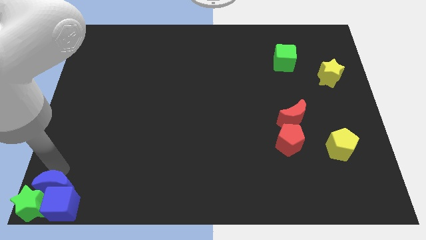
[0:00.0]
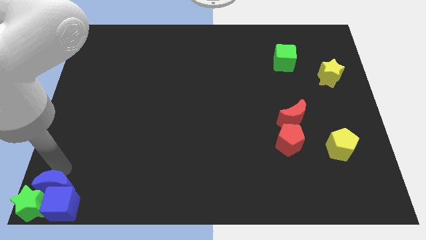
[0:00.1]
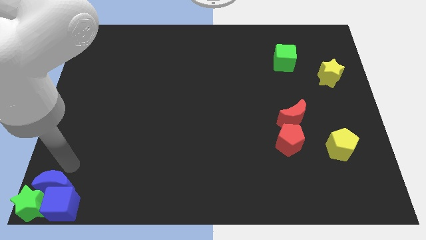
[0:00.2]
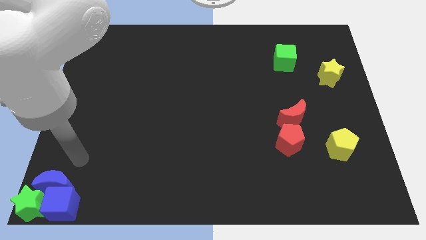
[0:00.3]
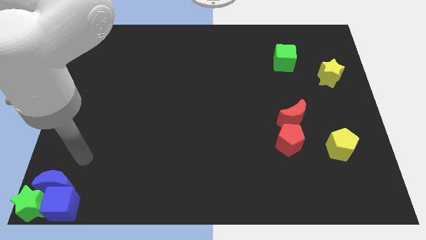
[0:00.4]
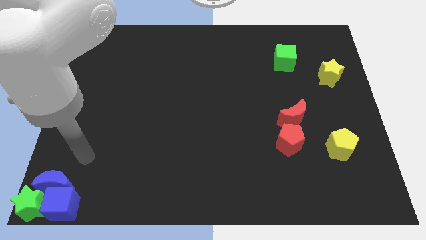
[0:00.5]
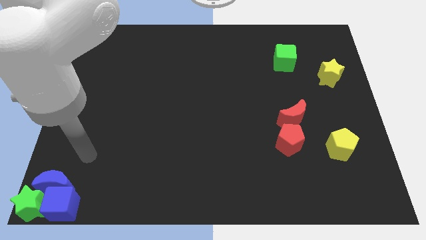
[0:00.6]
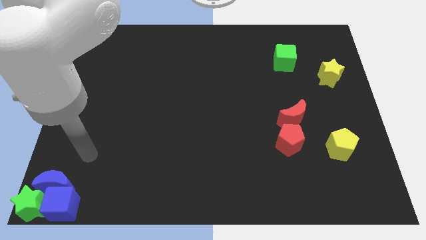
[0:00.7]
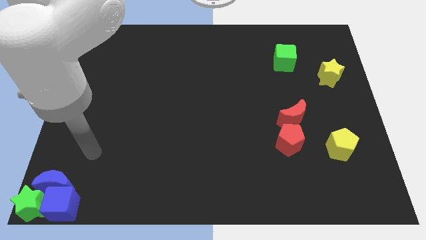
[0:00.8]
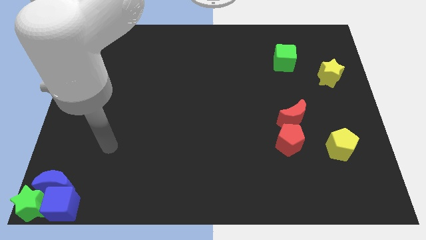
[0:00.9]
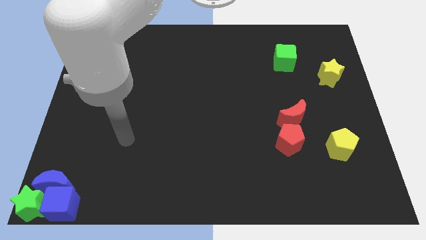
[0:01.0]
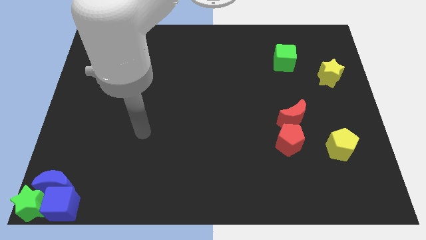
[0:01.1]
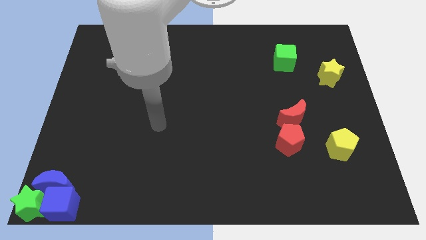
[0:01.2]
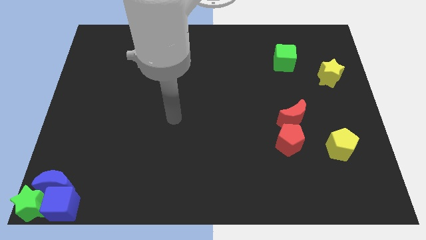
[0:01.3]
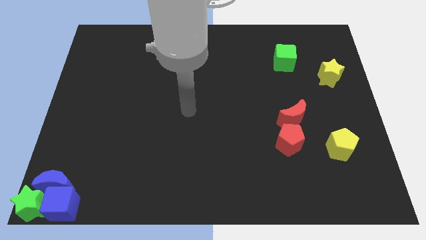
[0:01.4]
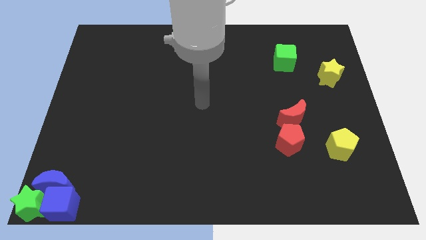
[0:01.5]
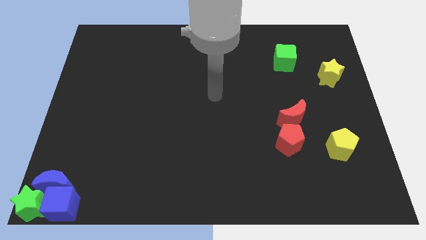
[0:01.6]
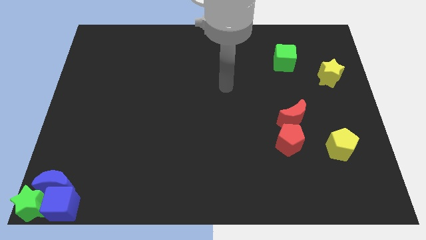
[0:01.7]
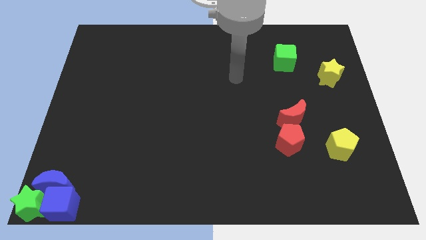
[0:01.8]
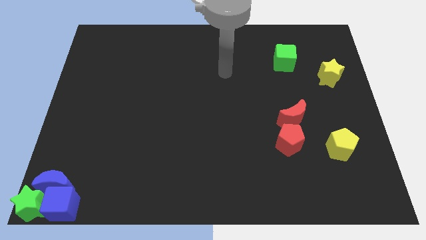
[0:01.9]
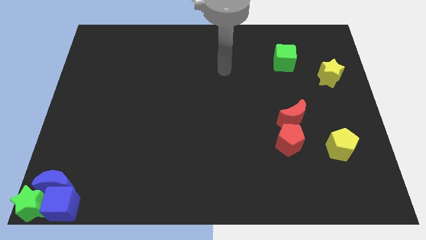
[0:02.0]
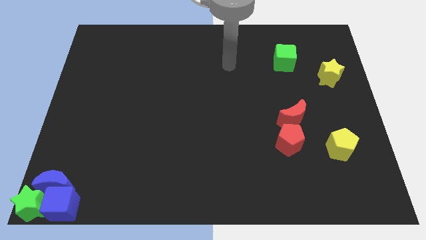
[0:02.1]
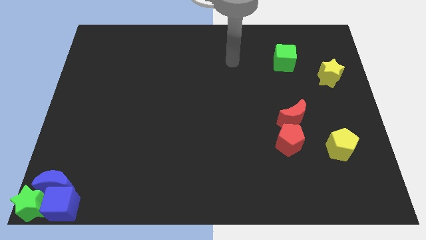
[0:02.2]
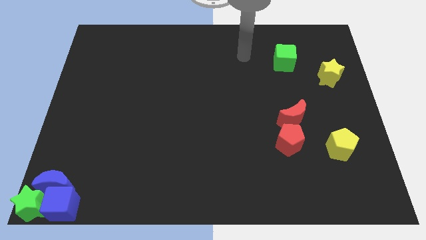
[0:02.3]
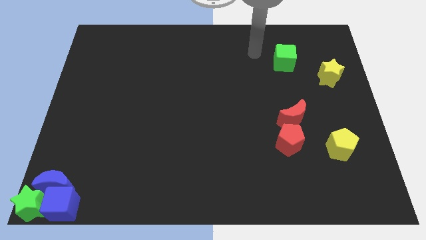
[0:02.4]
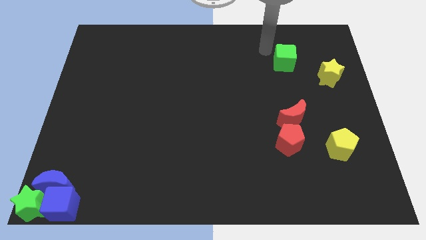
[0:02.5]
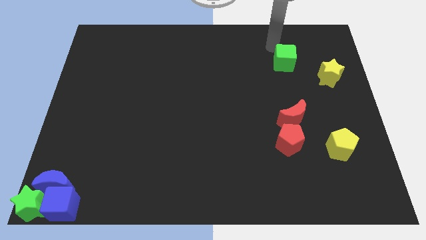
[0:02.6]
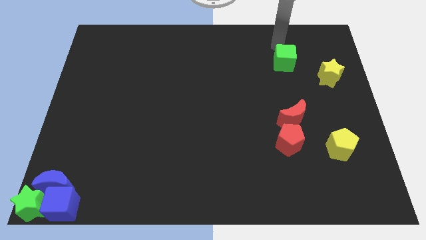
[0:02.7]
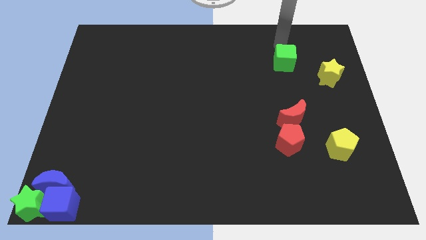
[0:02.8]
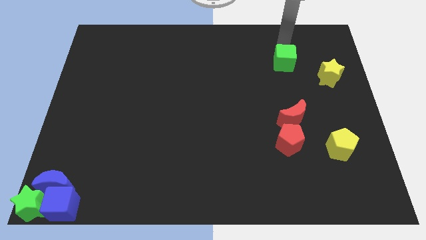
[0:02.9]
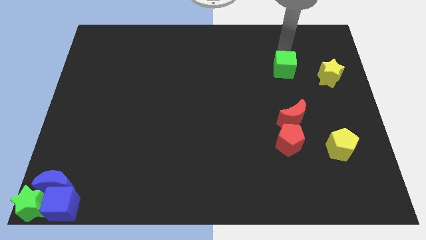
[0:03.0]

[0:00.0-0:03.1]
move your arm away from the blue moon

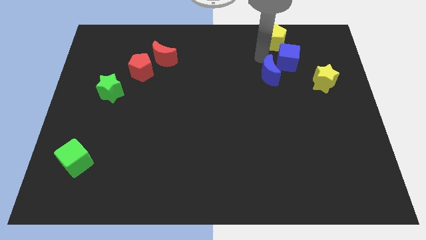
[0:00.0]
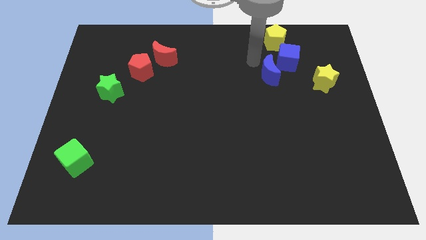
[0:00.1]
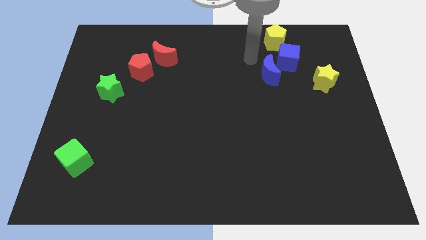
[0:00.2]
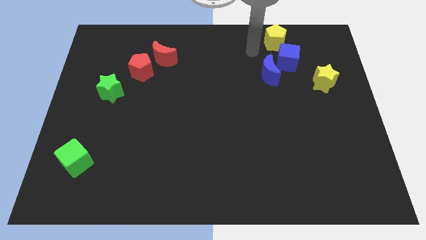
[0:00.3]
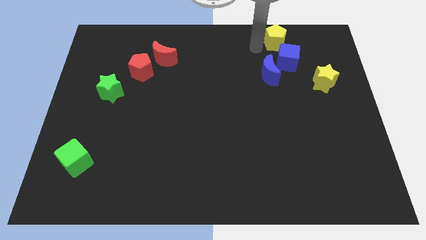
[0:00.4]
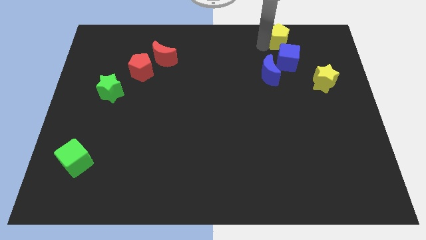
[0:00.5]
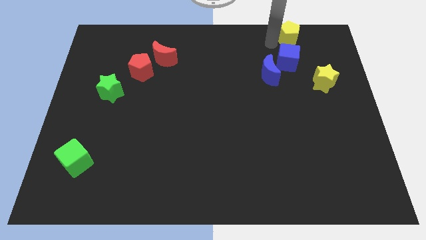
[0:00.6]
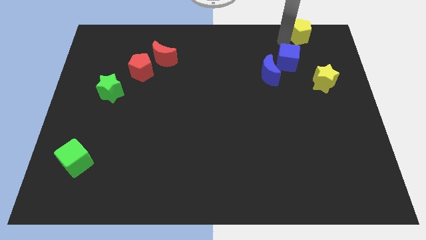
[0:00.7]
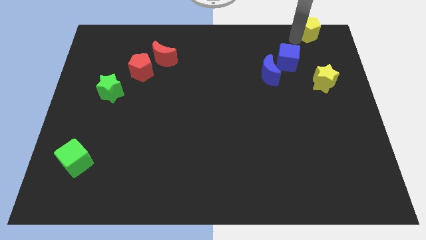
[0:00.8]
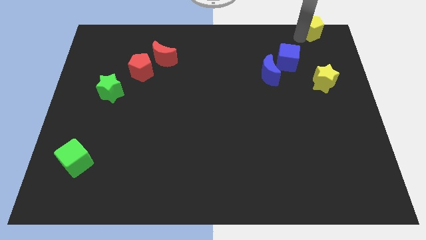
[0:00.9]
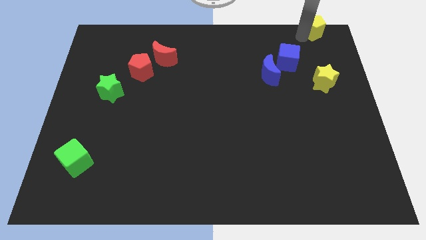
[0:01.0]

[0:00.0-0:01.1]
place the yellow pentagon above the yellow star

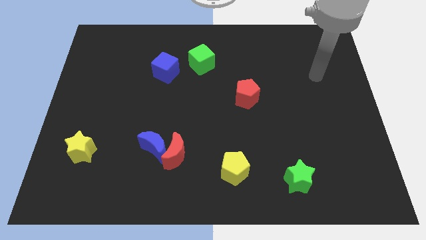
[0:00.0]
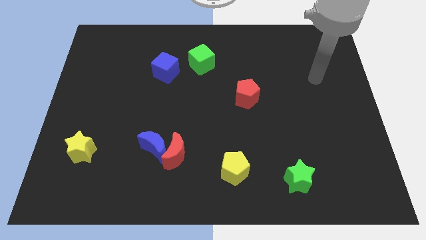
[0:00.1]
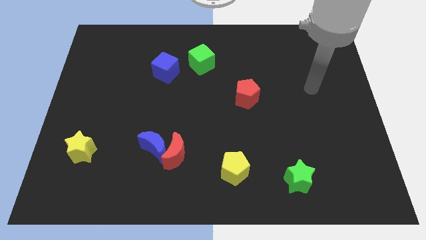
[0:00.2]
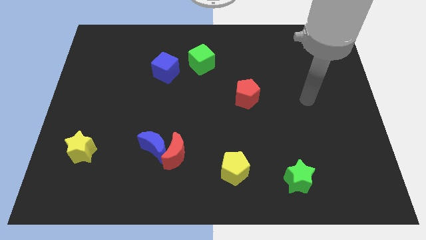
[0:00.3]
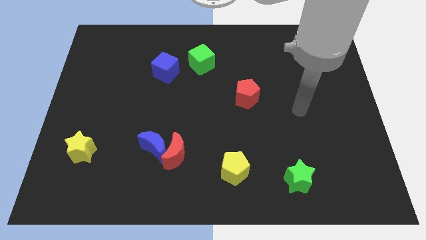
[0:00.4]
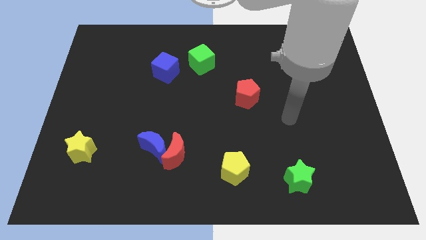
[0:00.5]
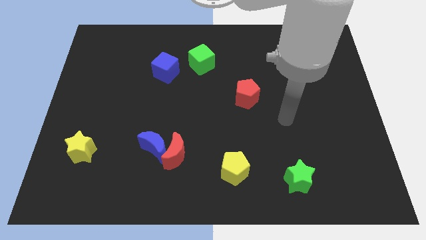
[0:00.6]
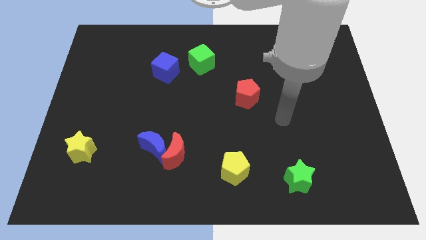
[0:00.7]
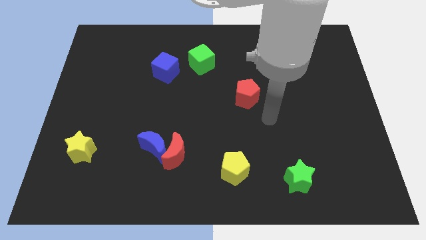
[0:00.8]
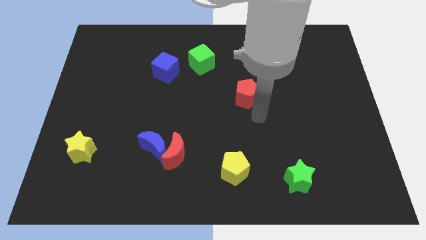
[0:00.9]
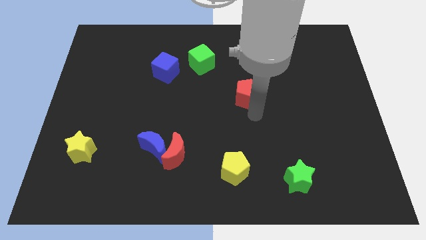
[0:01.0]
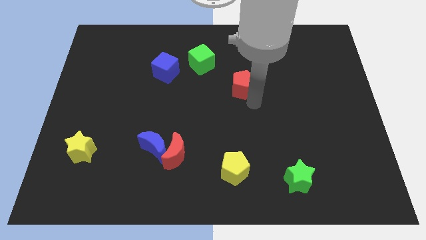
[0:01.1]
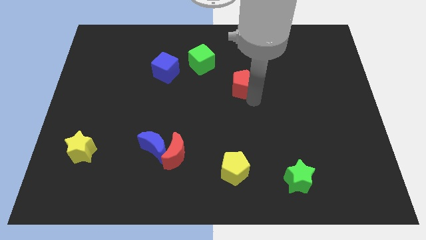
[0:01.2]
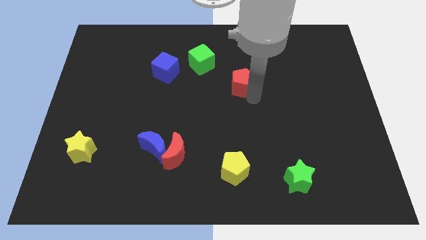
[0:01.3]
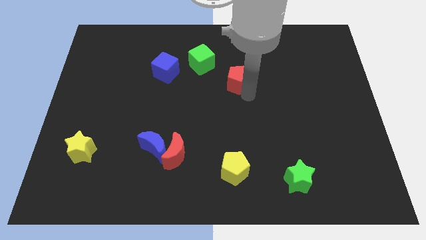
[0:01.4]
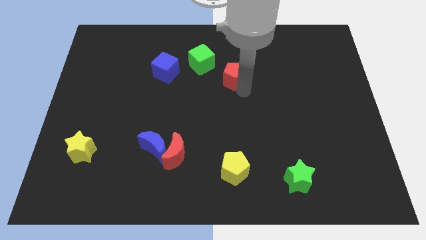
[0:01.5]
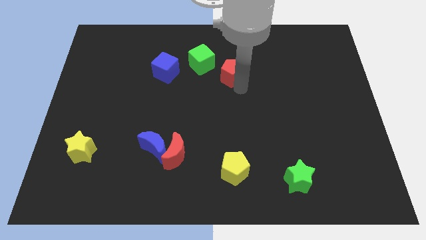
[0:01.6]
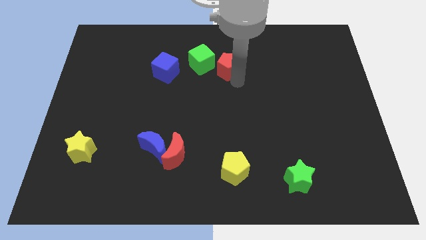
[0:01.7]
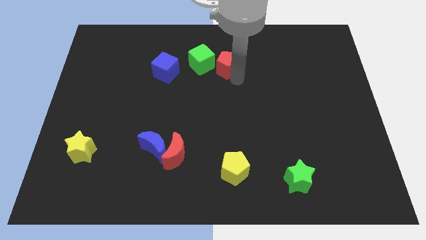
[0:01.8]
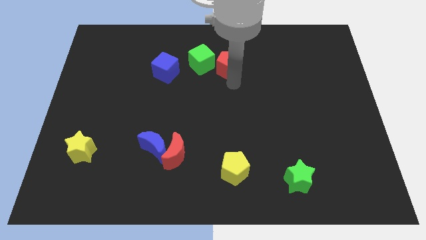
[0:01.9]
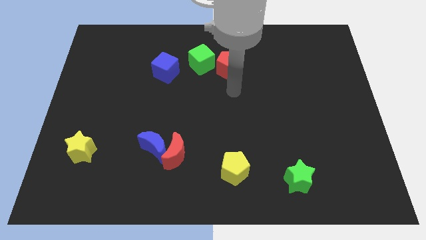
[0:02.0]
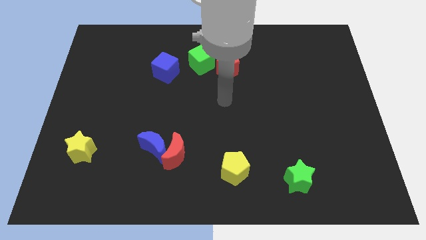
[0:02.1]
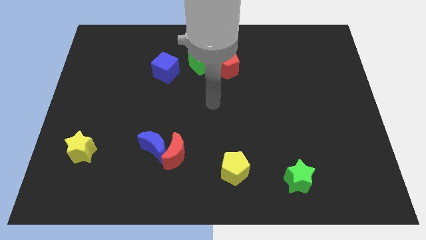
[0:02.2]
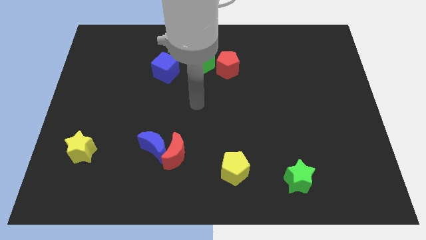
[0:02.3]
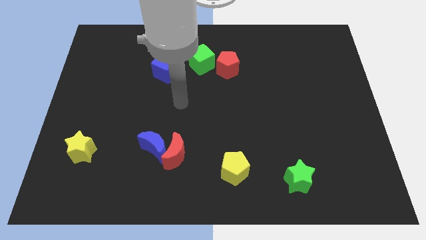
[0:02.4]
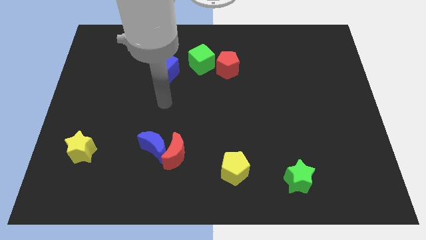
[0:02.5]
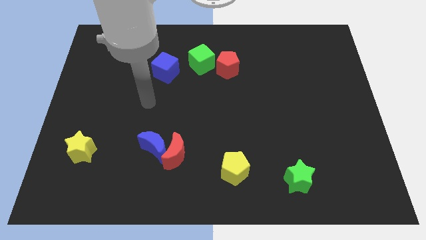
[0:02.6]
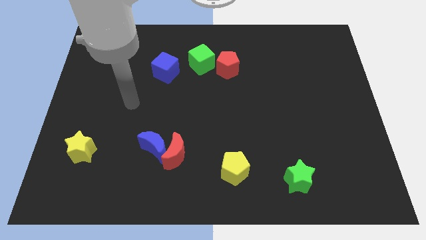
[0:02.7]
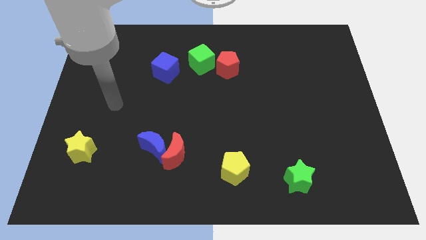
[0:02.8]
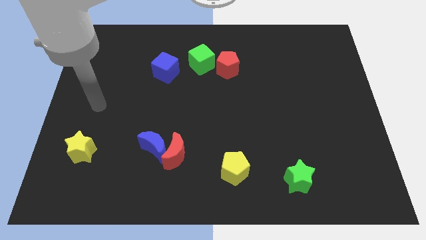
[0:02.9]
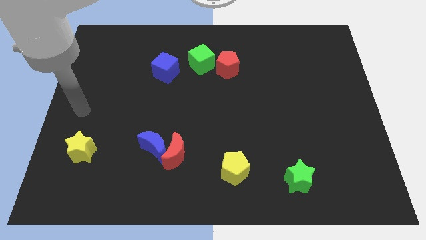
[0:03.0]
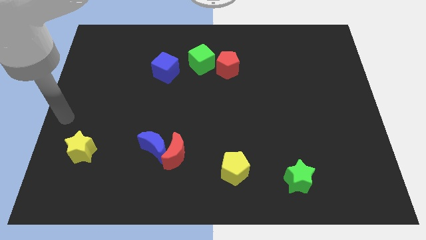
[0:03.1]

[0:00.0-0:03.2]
place the red pentagon close to the green cube

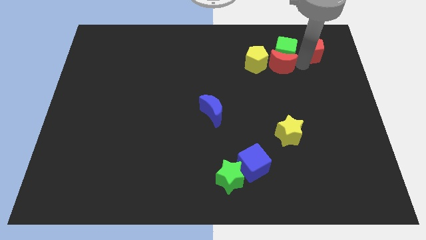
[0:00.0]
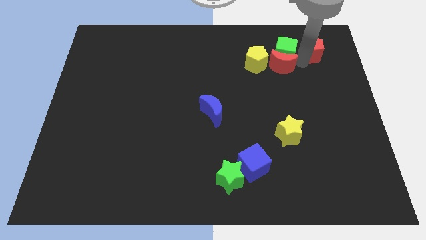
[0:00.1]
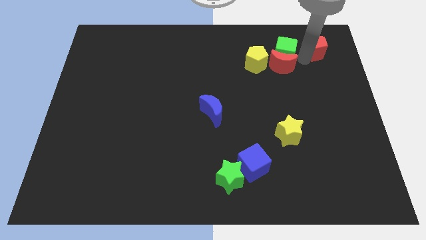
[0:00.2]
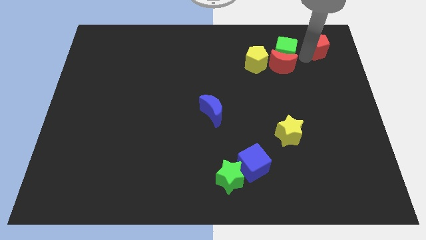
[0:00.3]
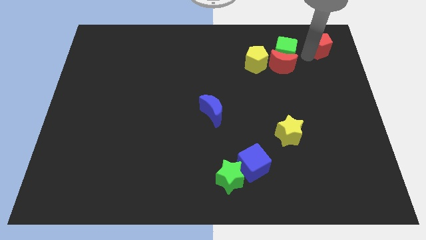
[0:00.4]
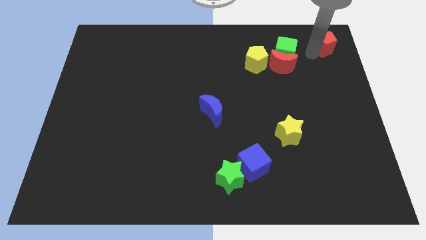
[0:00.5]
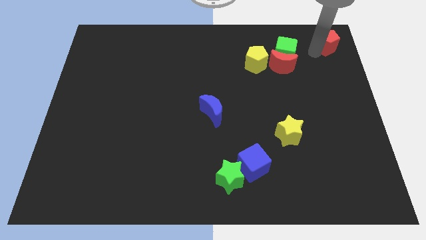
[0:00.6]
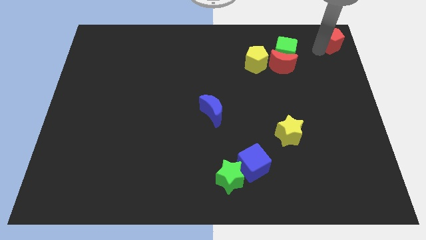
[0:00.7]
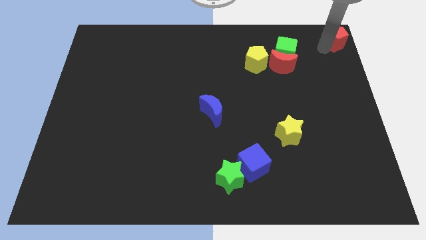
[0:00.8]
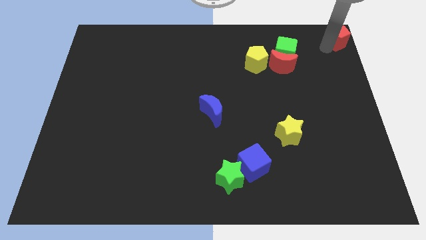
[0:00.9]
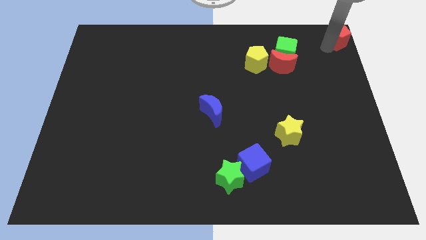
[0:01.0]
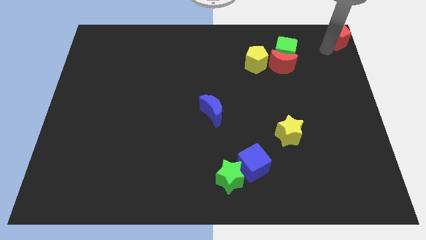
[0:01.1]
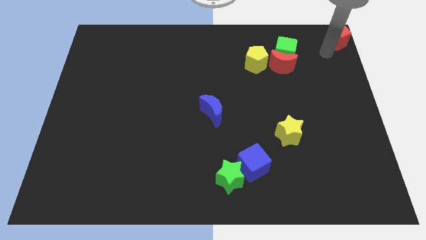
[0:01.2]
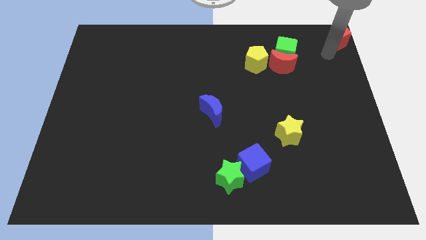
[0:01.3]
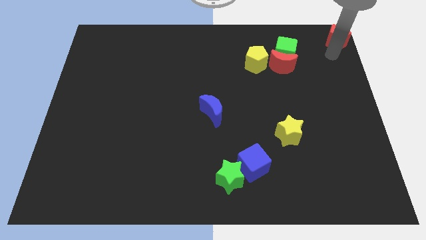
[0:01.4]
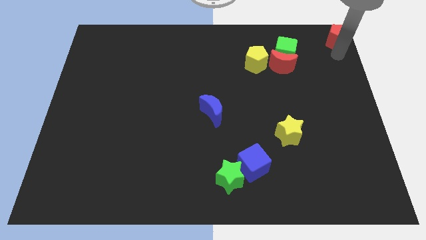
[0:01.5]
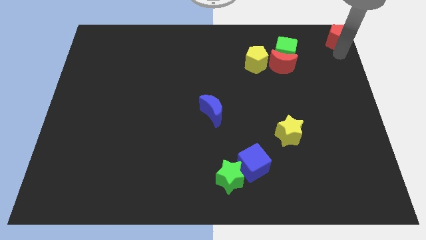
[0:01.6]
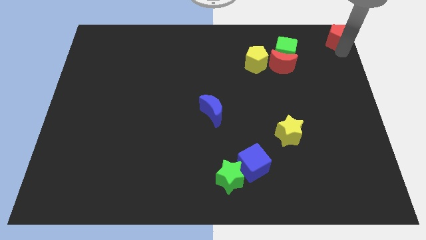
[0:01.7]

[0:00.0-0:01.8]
move the red pentagon to the top right corner
